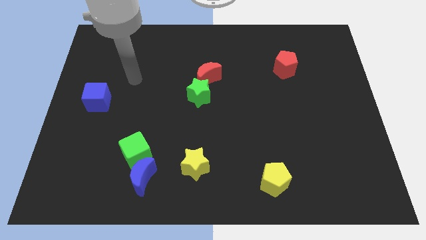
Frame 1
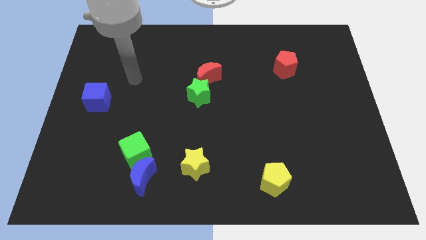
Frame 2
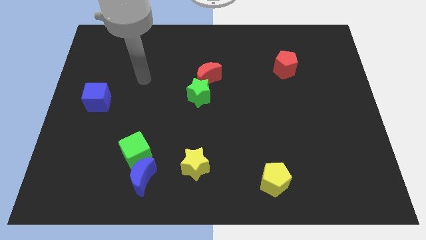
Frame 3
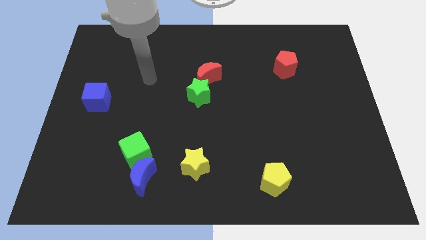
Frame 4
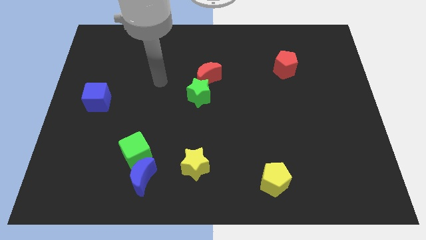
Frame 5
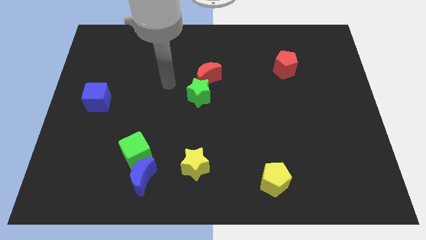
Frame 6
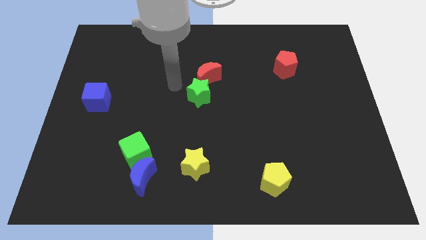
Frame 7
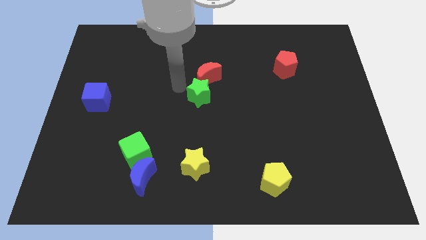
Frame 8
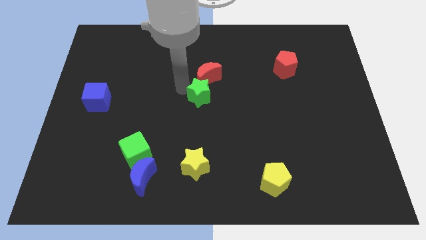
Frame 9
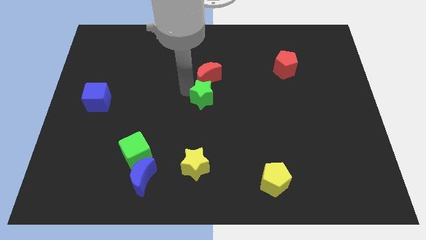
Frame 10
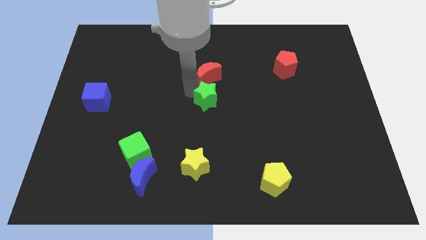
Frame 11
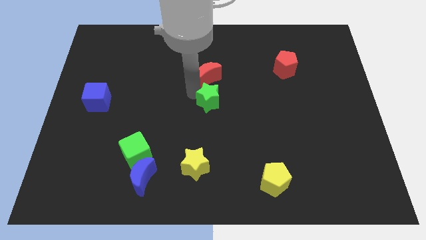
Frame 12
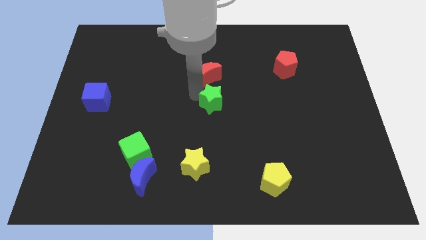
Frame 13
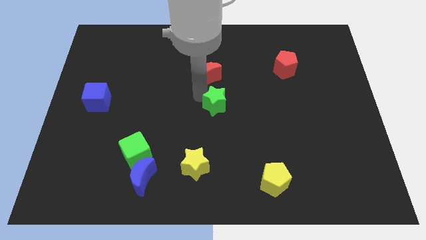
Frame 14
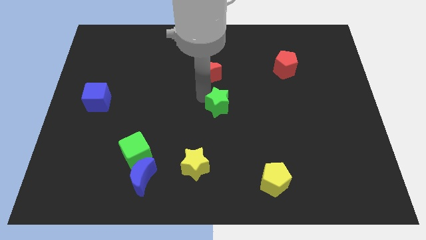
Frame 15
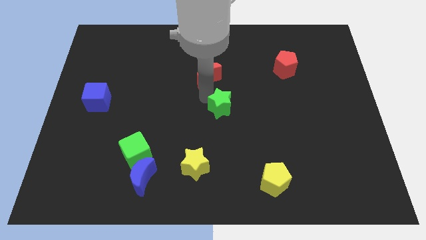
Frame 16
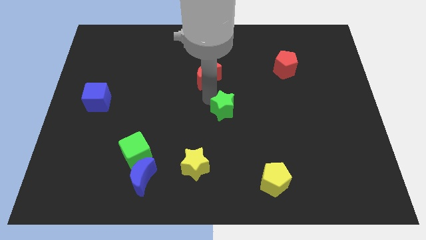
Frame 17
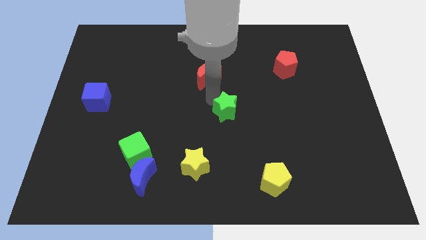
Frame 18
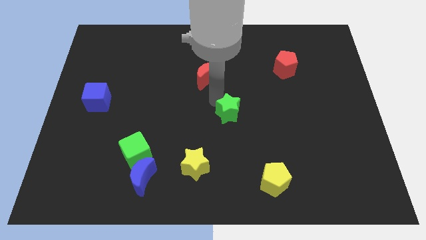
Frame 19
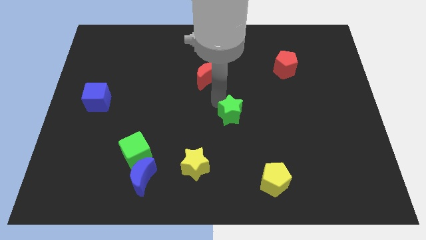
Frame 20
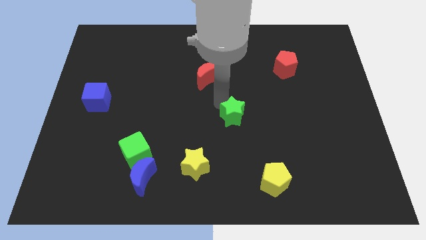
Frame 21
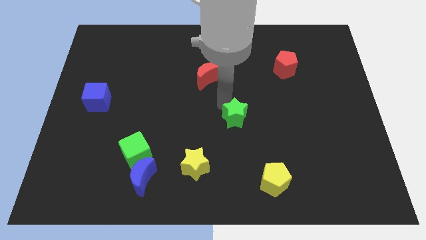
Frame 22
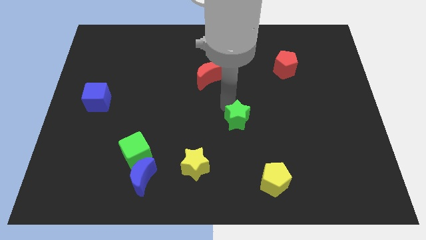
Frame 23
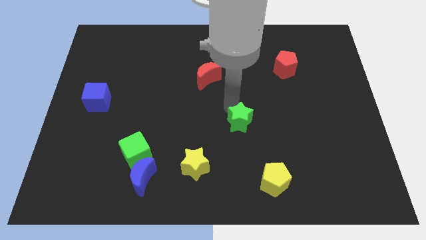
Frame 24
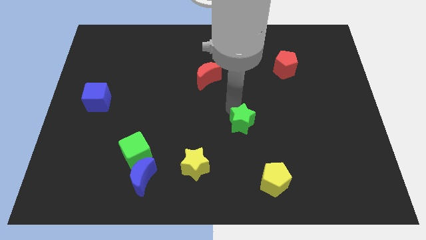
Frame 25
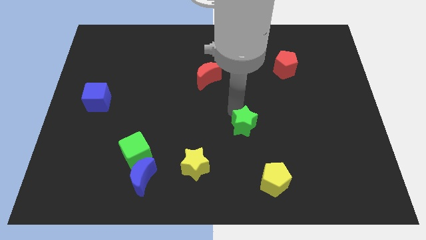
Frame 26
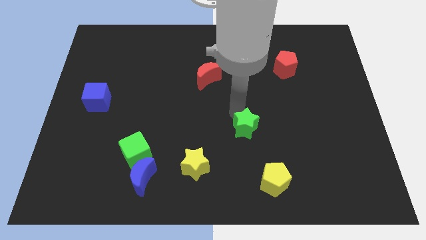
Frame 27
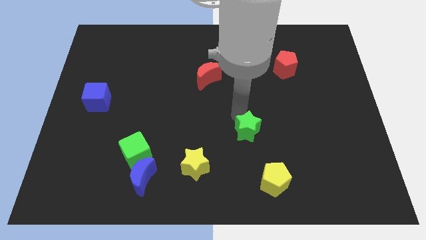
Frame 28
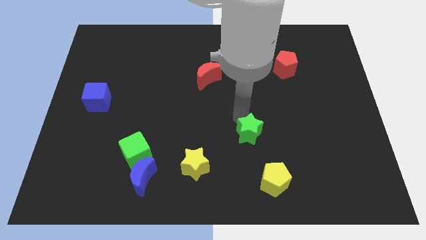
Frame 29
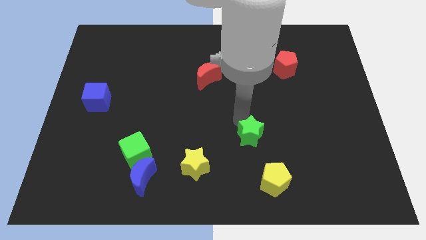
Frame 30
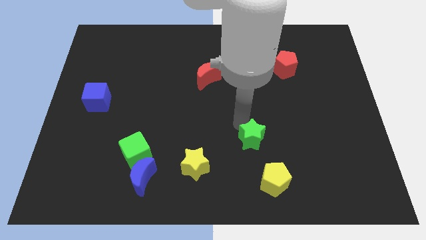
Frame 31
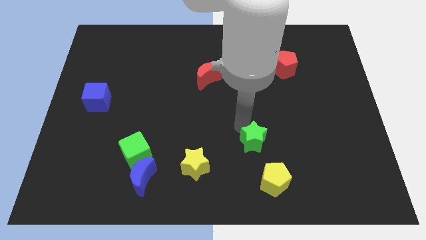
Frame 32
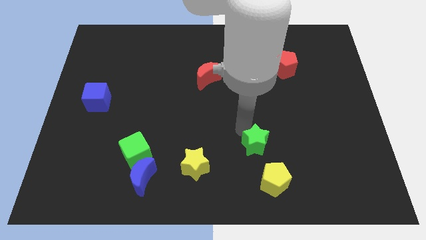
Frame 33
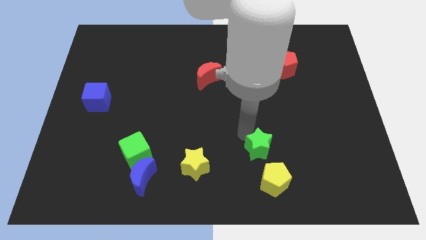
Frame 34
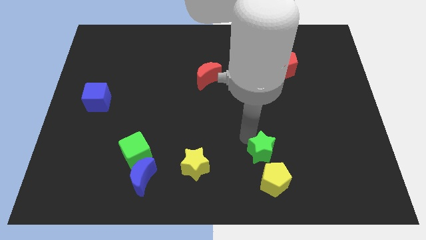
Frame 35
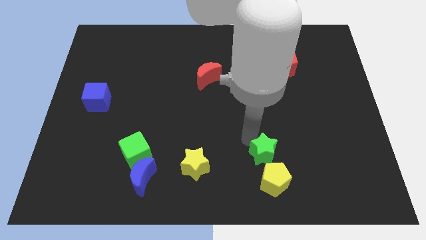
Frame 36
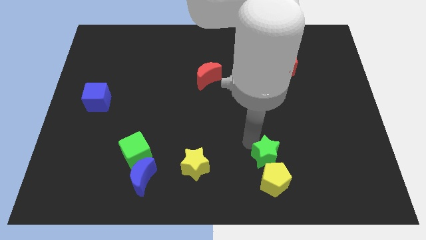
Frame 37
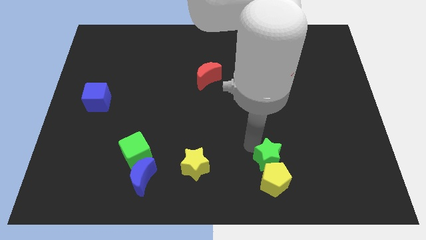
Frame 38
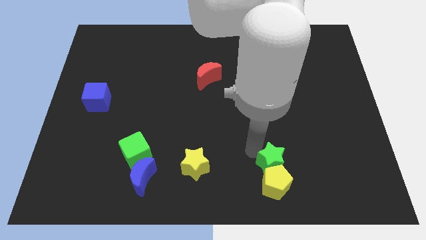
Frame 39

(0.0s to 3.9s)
push the green star next to the yellow pentagon

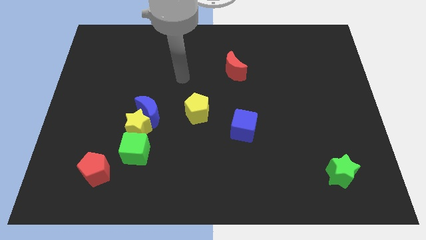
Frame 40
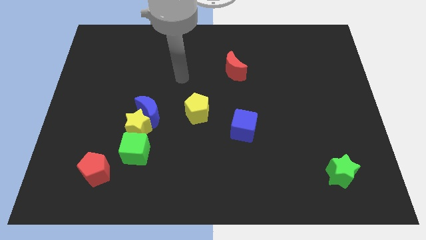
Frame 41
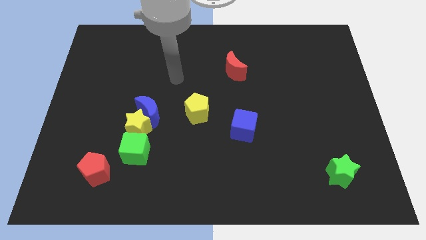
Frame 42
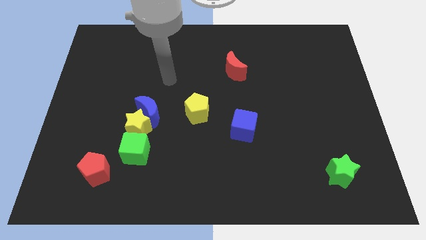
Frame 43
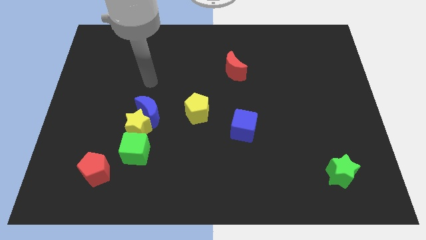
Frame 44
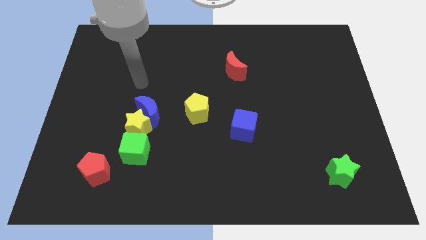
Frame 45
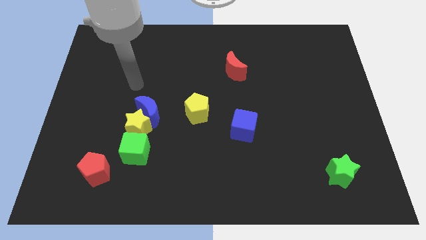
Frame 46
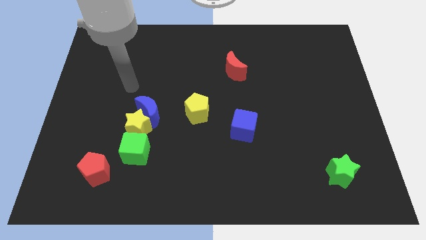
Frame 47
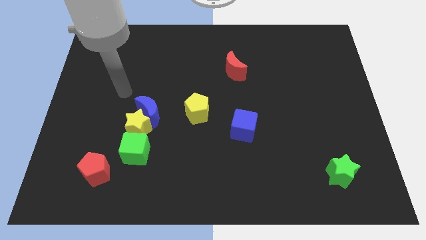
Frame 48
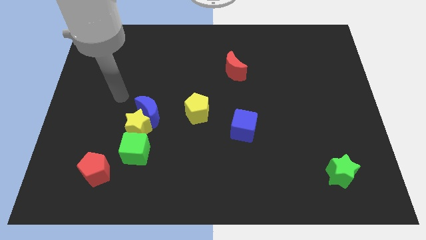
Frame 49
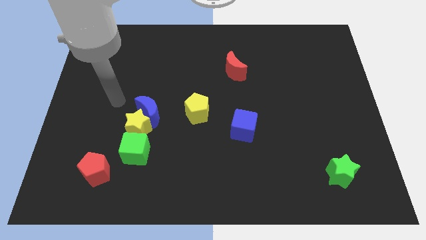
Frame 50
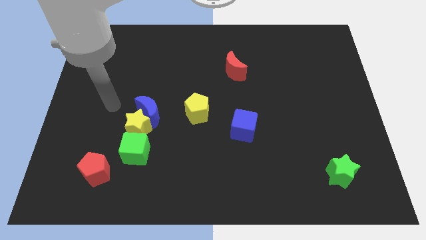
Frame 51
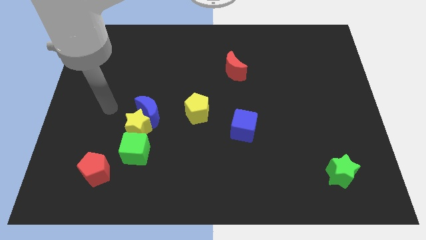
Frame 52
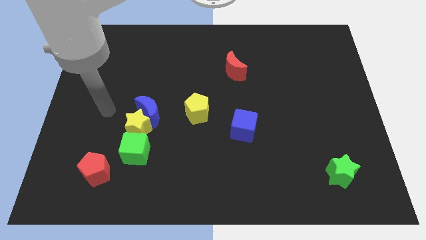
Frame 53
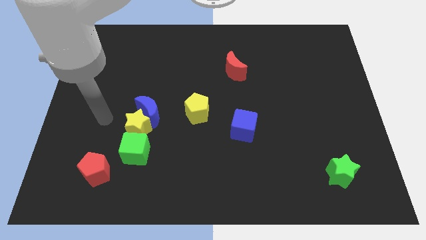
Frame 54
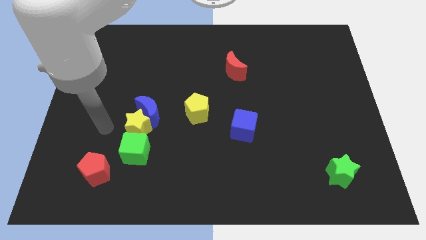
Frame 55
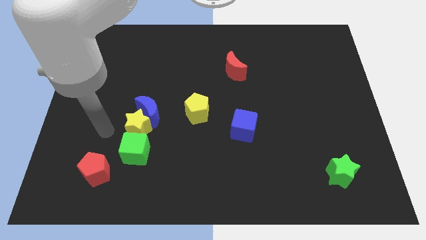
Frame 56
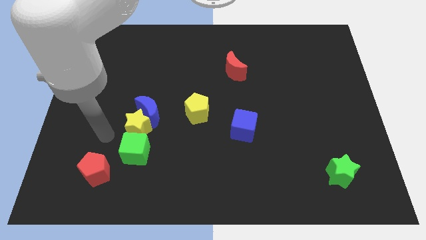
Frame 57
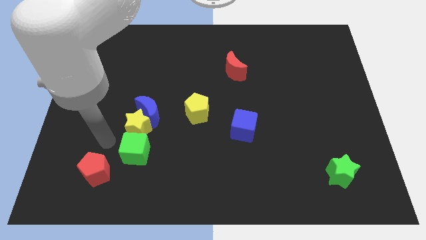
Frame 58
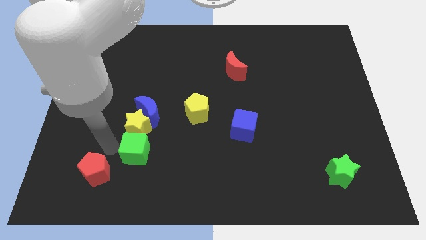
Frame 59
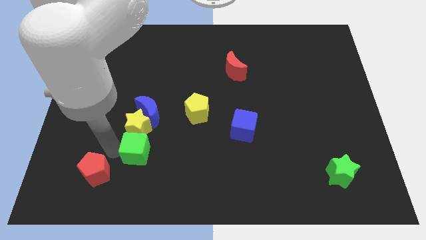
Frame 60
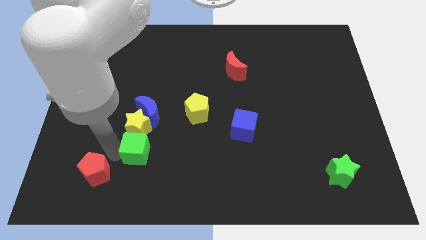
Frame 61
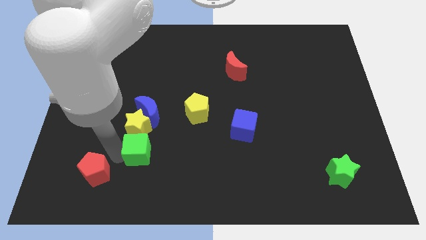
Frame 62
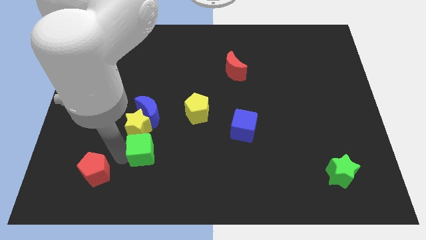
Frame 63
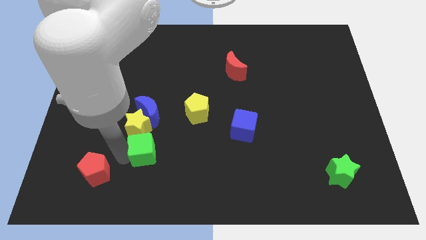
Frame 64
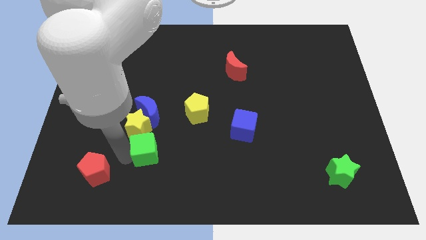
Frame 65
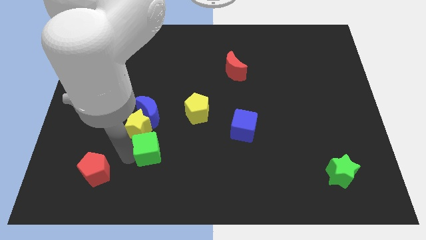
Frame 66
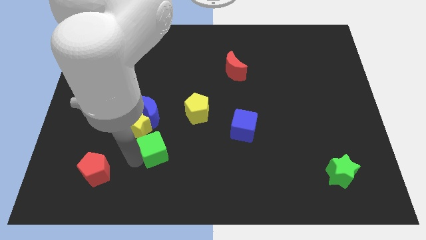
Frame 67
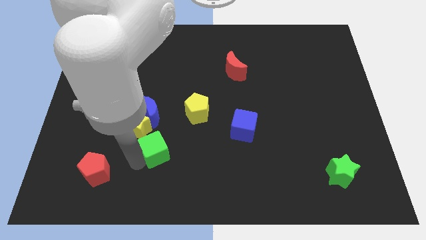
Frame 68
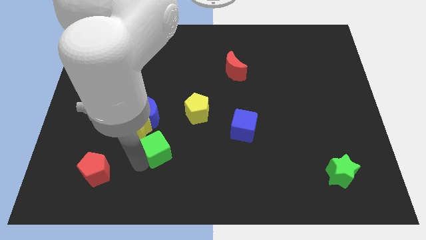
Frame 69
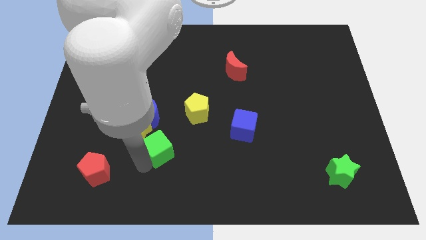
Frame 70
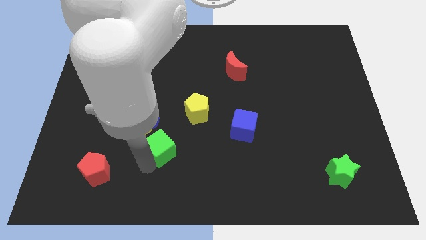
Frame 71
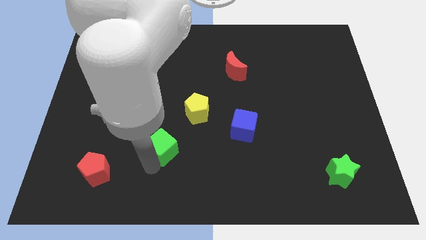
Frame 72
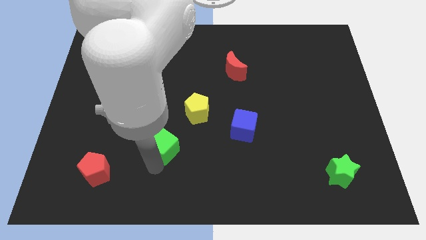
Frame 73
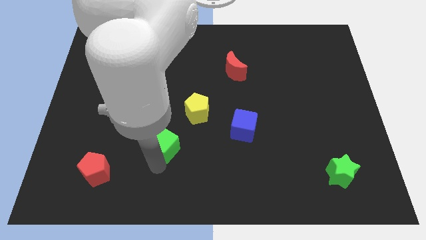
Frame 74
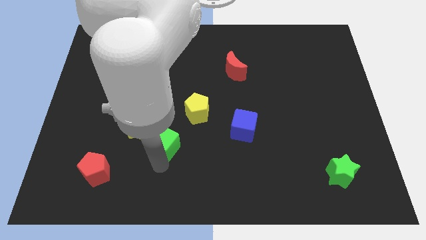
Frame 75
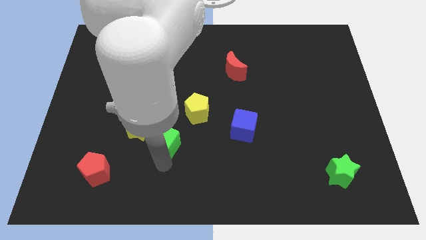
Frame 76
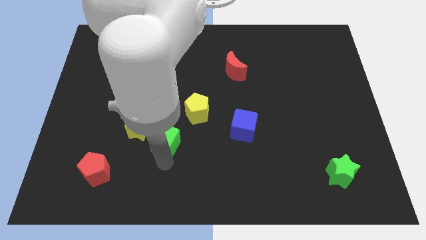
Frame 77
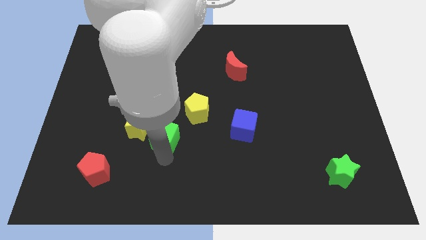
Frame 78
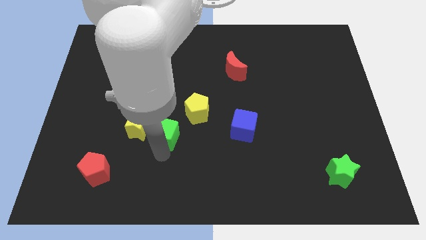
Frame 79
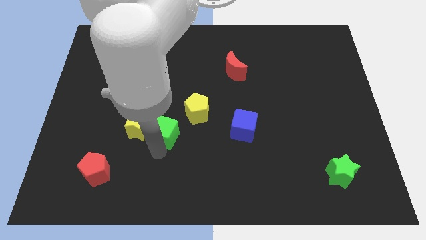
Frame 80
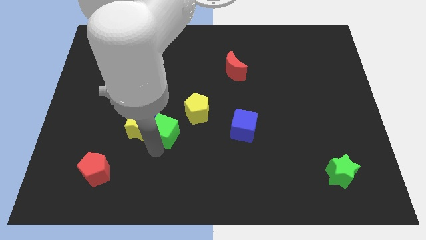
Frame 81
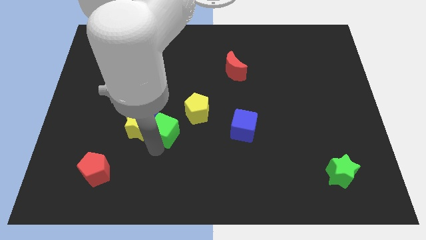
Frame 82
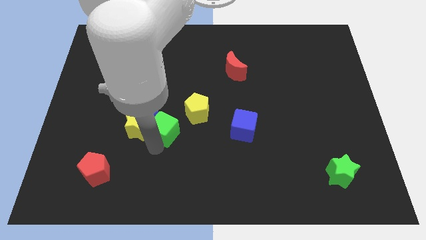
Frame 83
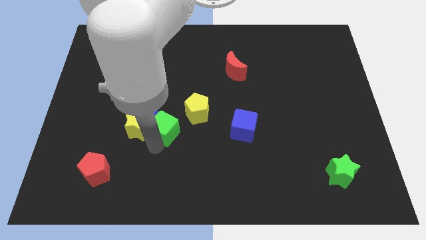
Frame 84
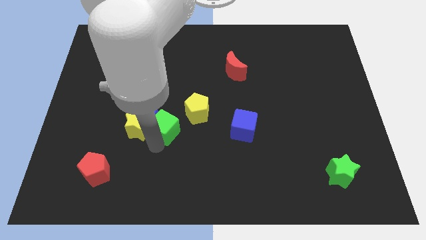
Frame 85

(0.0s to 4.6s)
move the green cube to the blue moon
